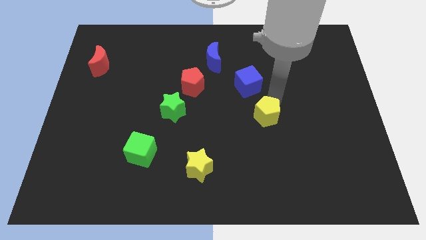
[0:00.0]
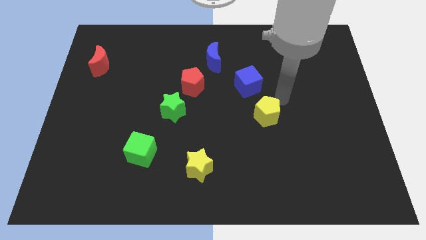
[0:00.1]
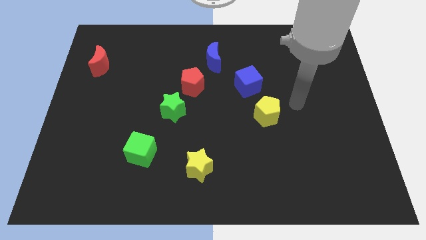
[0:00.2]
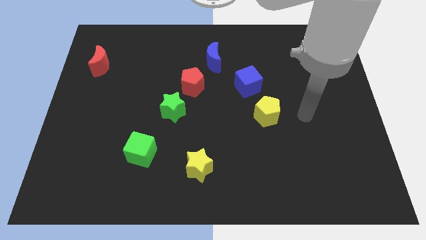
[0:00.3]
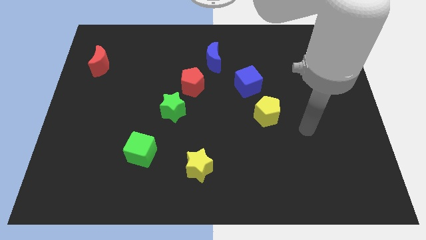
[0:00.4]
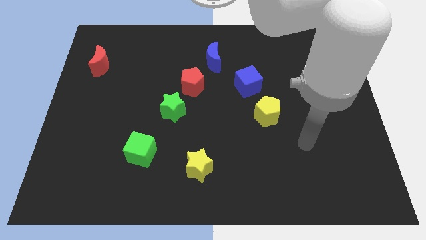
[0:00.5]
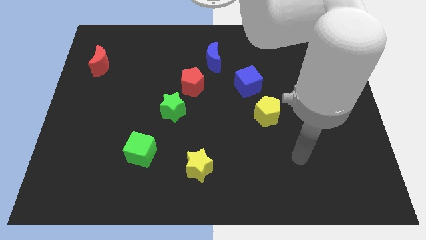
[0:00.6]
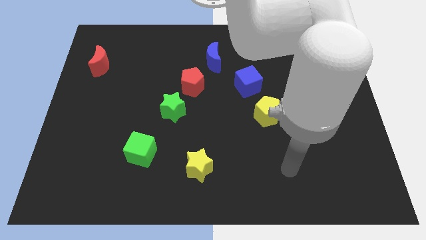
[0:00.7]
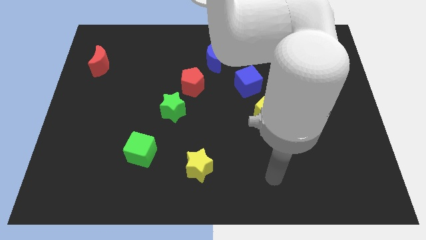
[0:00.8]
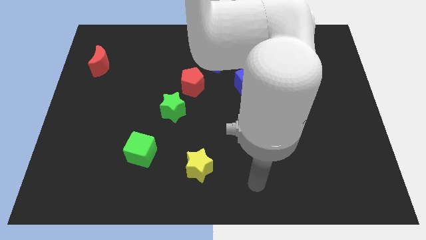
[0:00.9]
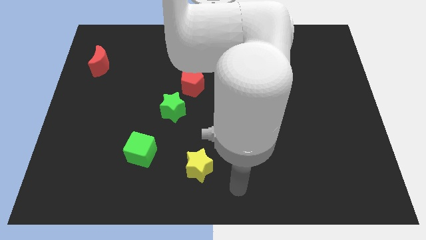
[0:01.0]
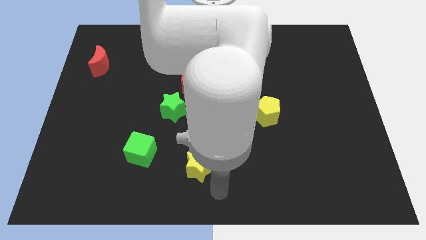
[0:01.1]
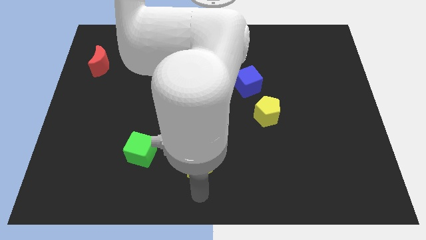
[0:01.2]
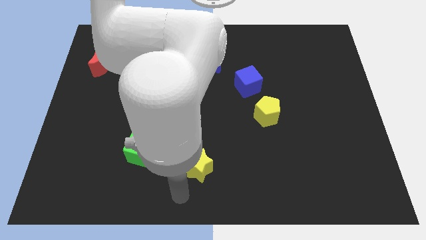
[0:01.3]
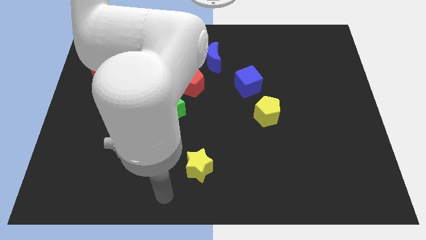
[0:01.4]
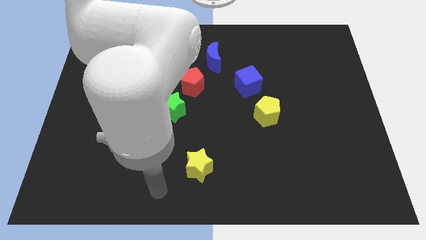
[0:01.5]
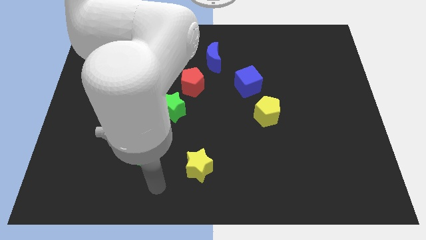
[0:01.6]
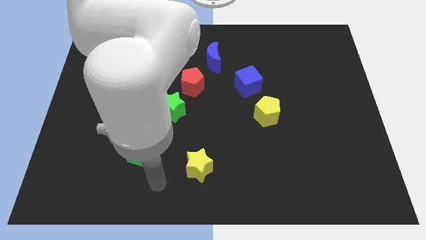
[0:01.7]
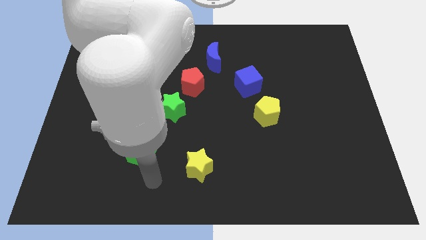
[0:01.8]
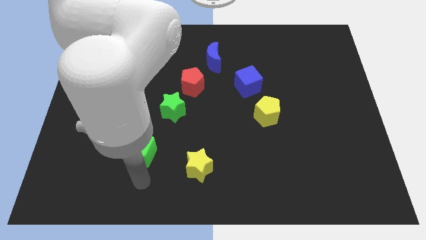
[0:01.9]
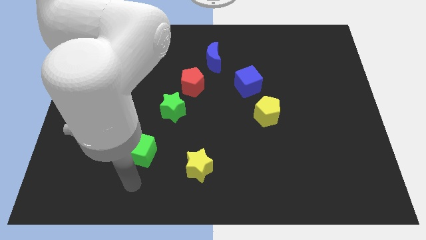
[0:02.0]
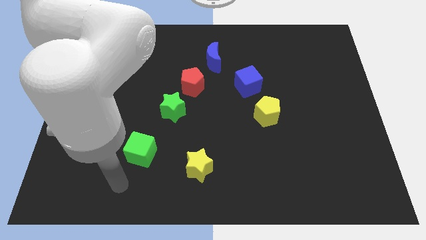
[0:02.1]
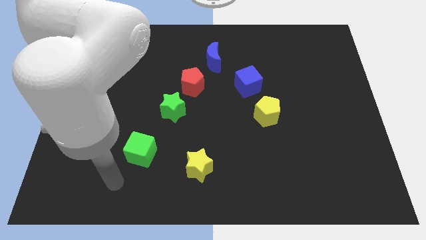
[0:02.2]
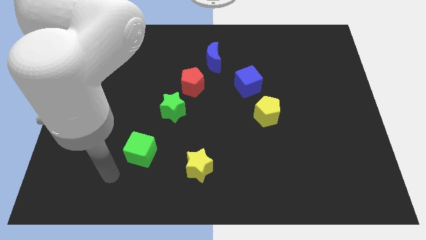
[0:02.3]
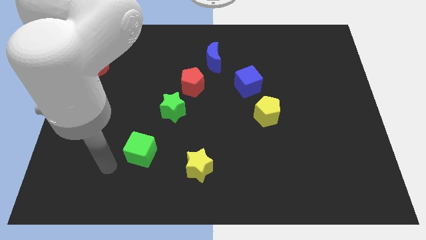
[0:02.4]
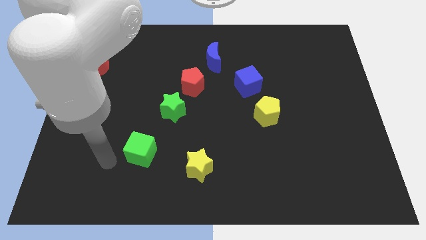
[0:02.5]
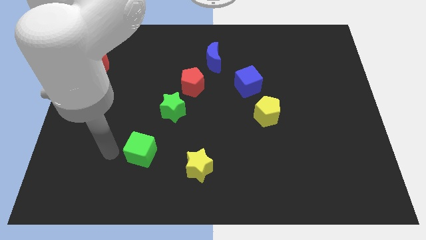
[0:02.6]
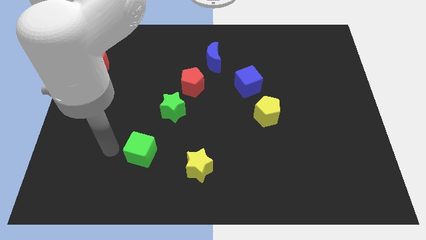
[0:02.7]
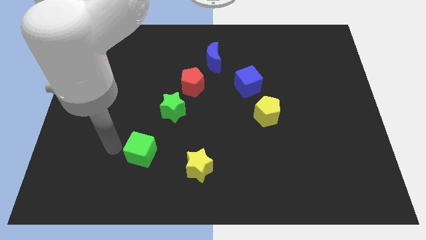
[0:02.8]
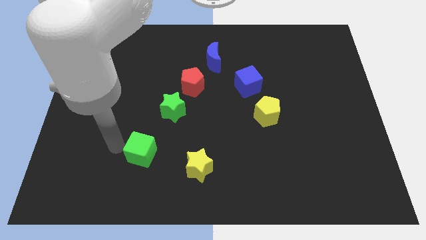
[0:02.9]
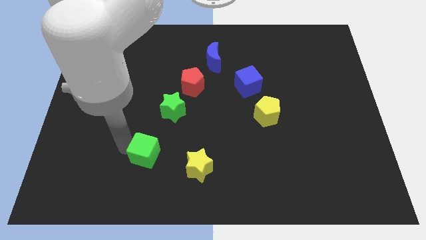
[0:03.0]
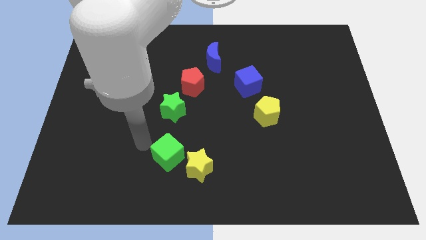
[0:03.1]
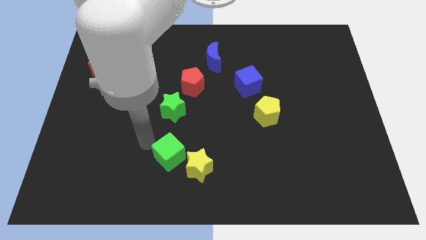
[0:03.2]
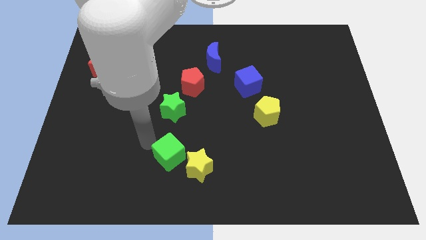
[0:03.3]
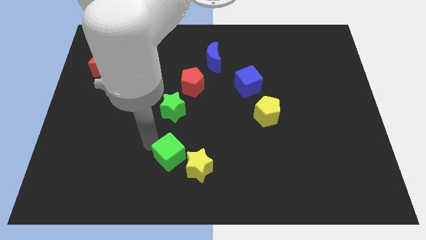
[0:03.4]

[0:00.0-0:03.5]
move your arm away from the yellow pentagon

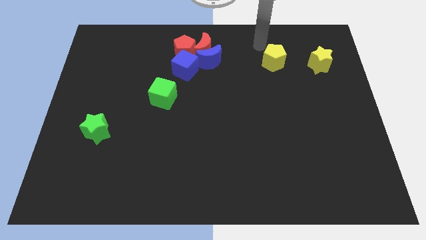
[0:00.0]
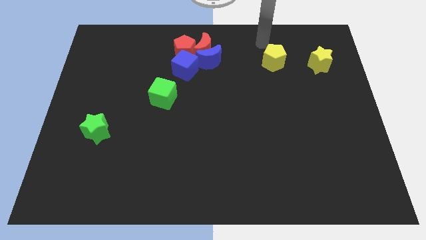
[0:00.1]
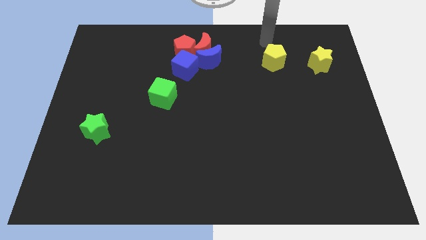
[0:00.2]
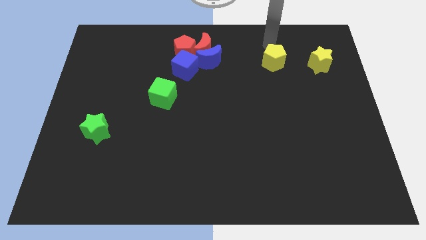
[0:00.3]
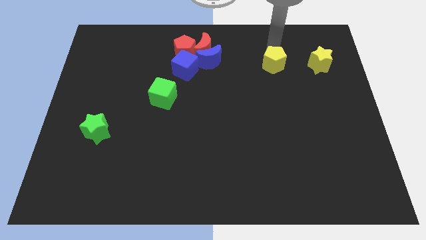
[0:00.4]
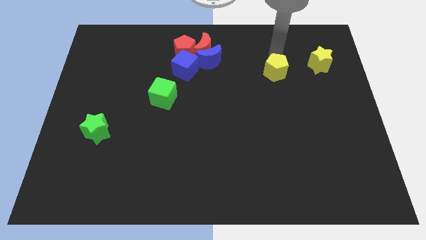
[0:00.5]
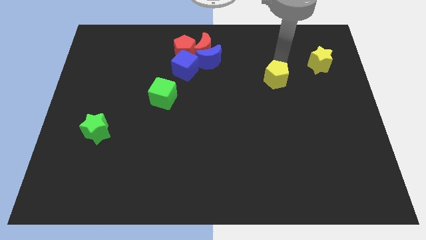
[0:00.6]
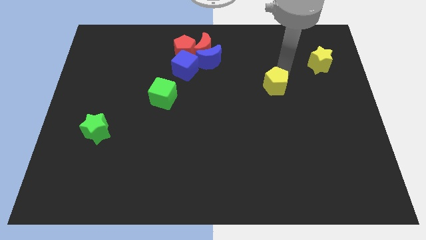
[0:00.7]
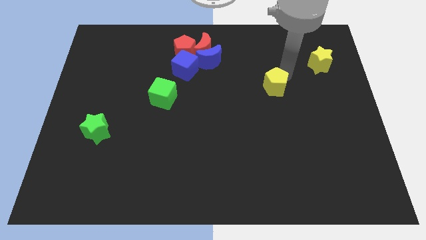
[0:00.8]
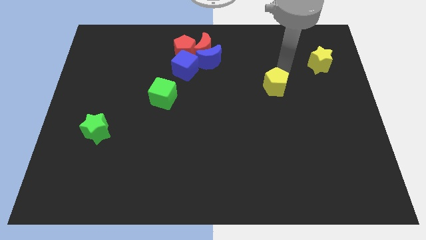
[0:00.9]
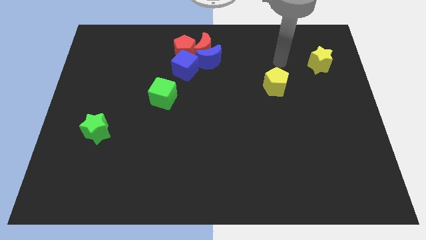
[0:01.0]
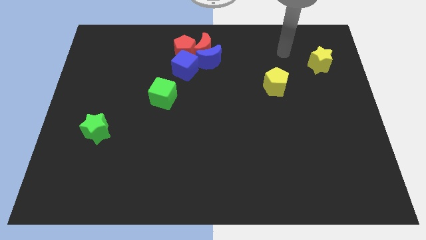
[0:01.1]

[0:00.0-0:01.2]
push the yellow pentagon downwards

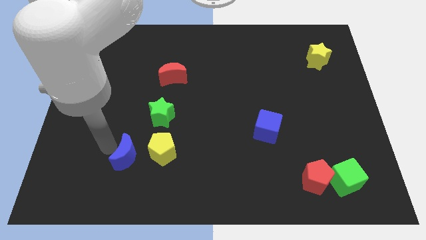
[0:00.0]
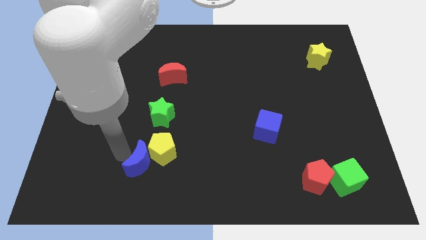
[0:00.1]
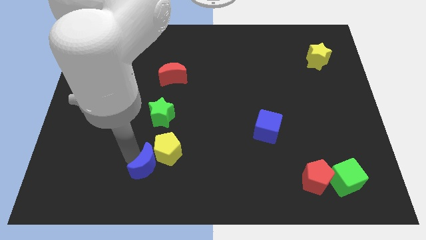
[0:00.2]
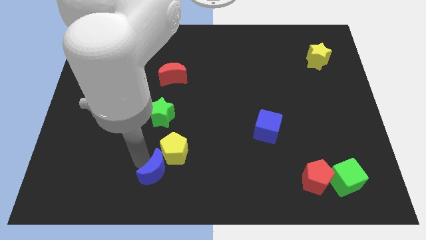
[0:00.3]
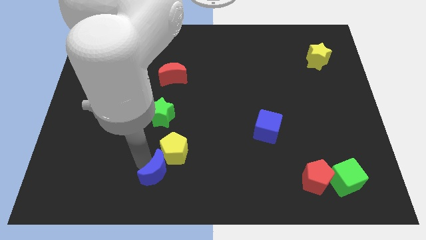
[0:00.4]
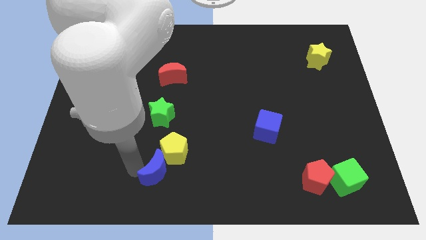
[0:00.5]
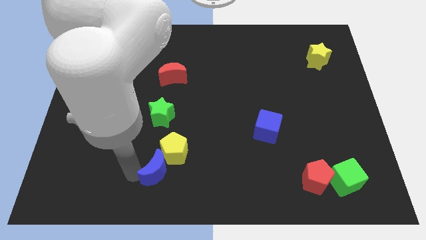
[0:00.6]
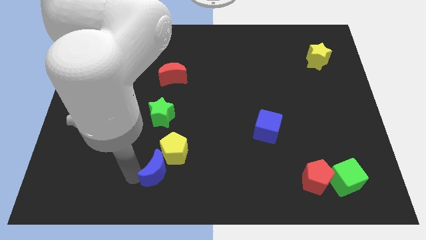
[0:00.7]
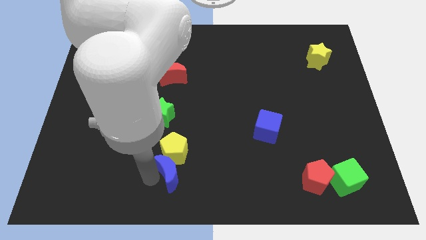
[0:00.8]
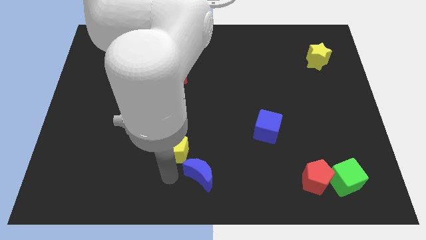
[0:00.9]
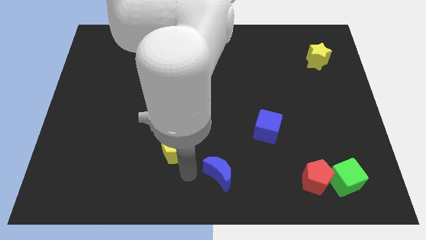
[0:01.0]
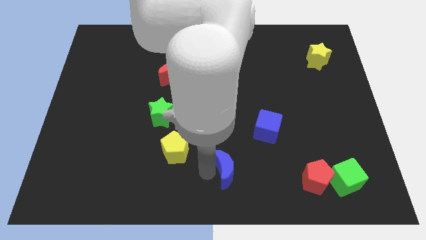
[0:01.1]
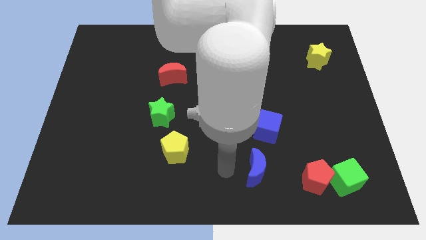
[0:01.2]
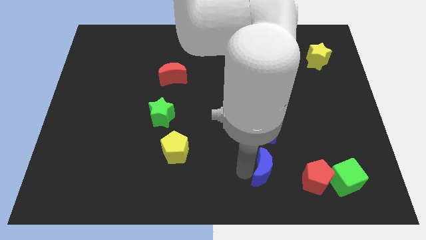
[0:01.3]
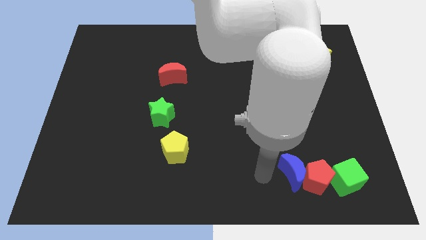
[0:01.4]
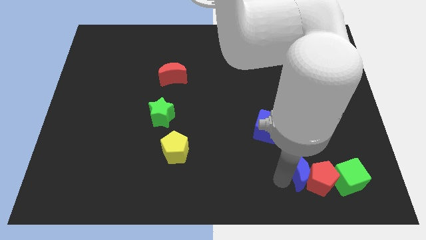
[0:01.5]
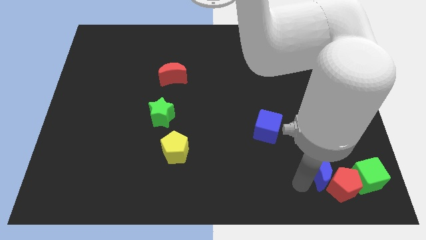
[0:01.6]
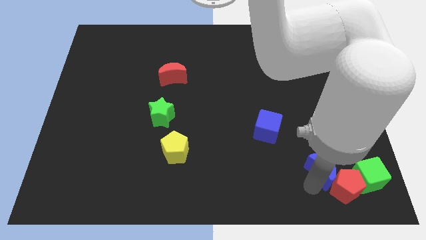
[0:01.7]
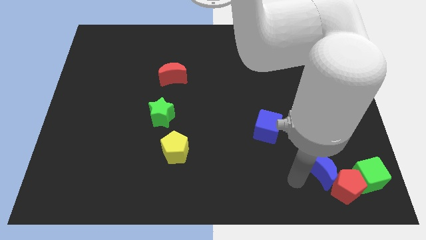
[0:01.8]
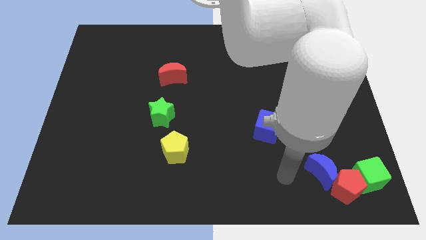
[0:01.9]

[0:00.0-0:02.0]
place the blue moon close to the red pentagon

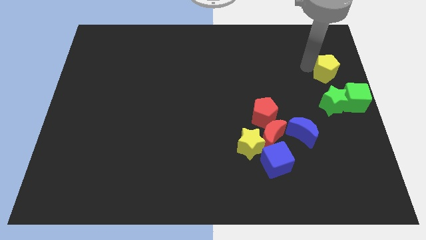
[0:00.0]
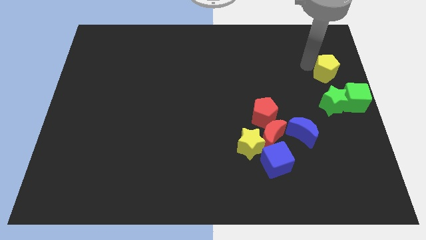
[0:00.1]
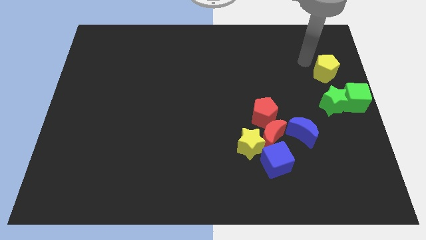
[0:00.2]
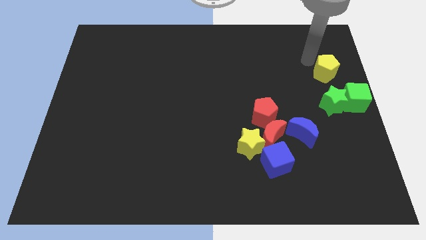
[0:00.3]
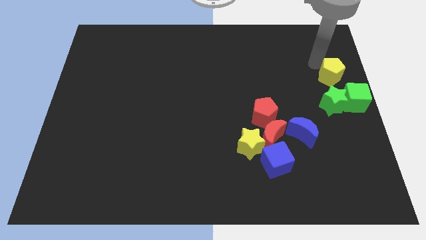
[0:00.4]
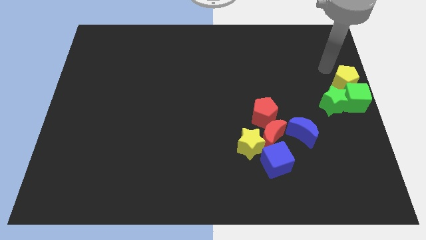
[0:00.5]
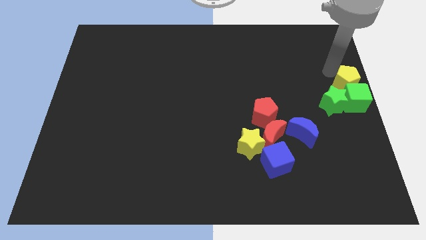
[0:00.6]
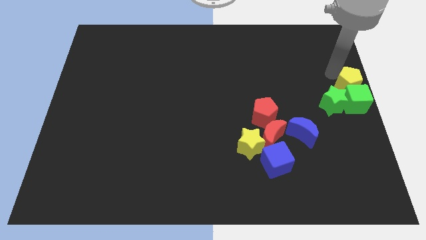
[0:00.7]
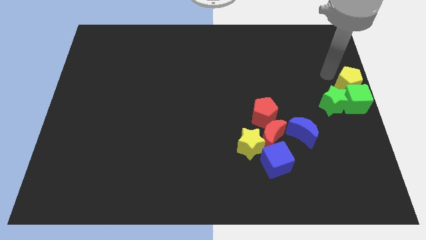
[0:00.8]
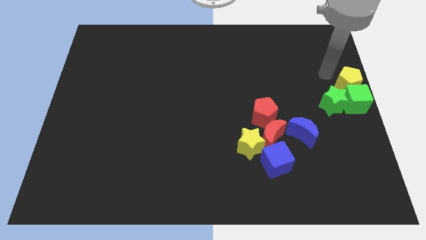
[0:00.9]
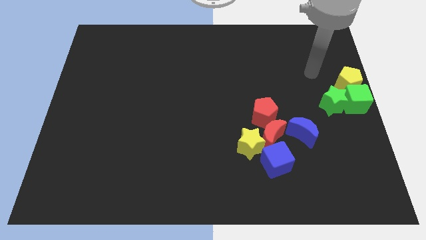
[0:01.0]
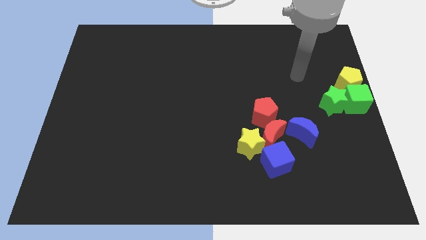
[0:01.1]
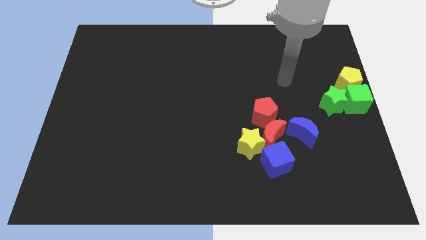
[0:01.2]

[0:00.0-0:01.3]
add the yellow pentagon to both the green blocks

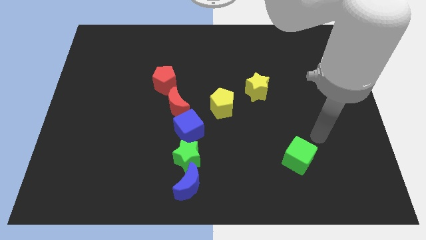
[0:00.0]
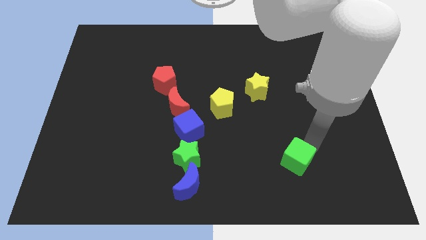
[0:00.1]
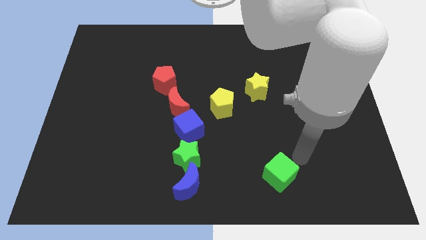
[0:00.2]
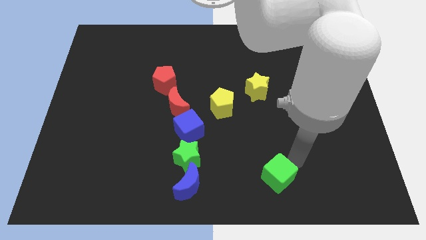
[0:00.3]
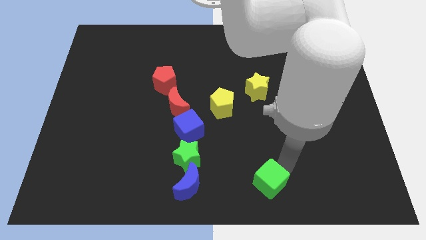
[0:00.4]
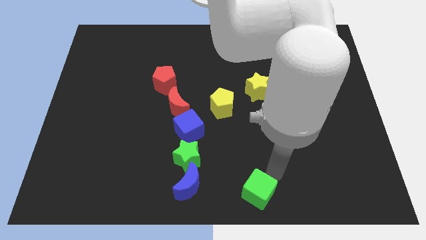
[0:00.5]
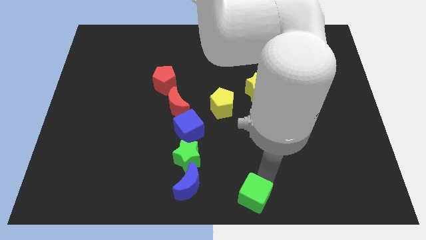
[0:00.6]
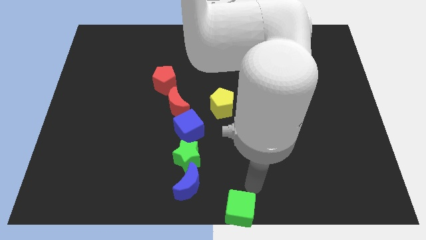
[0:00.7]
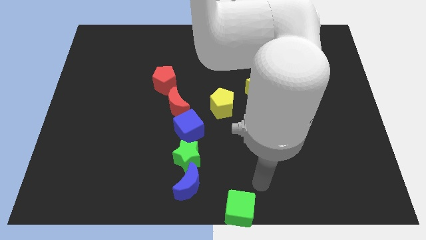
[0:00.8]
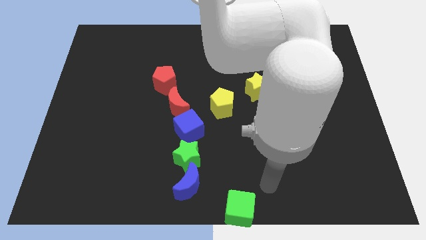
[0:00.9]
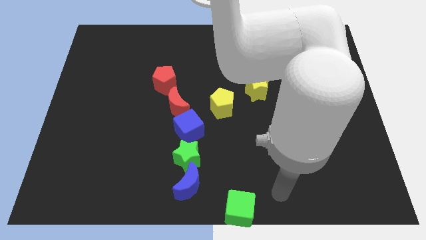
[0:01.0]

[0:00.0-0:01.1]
push the green cube diagonally to the blue moon
